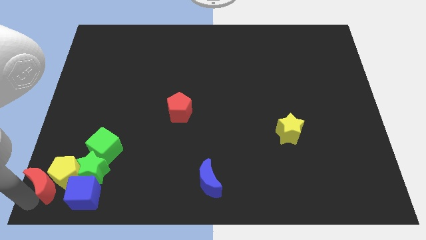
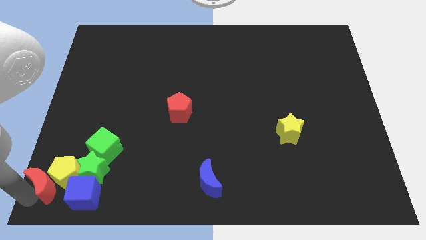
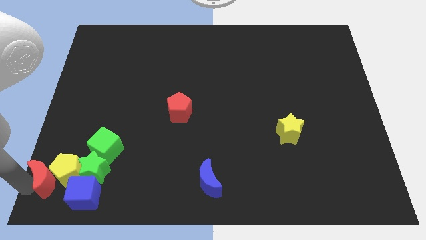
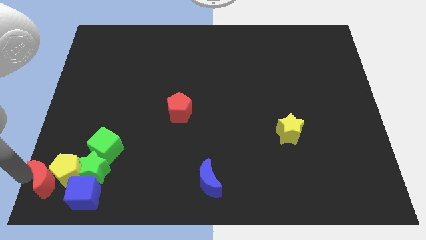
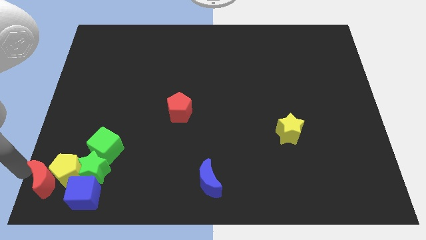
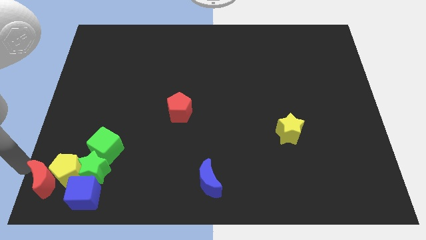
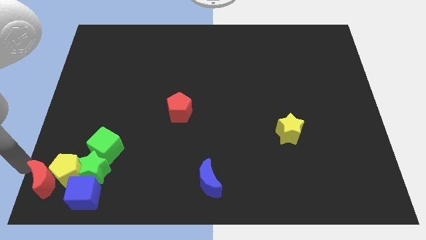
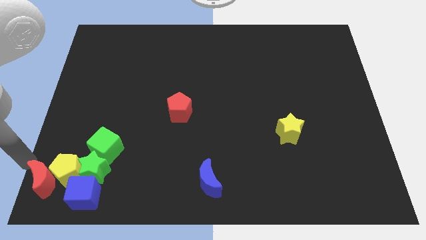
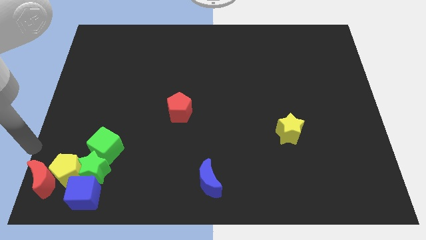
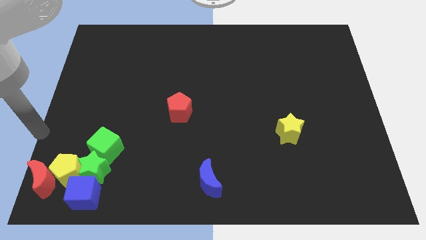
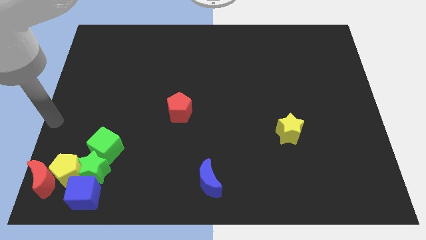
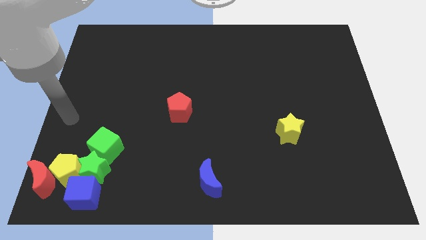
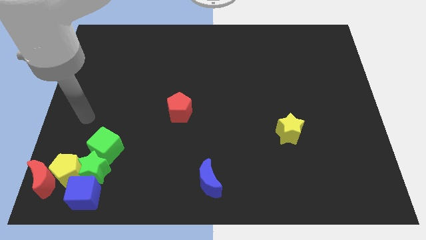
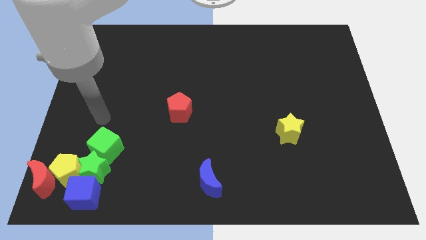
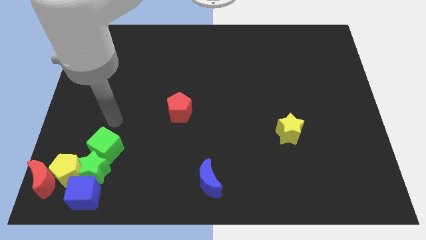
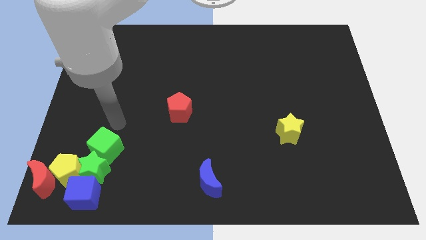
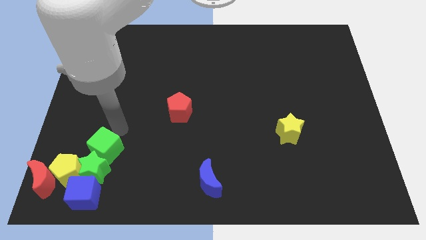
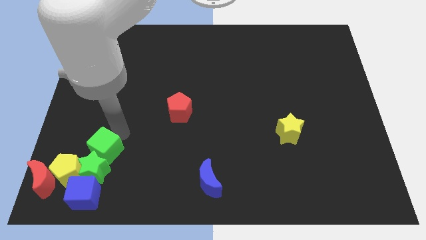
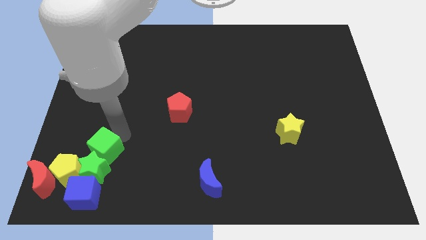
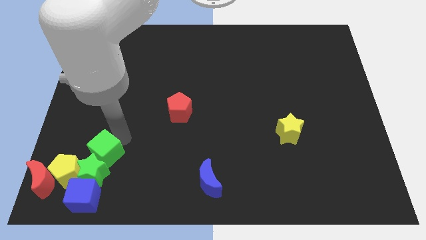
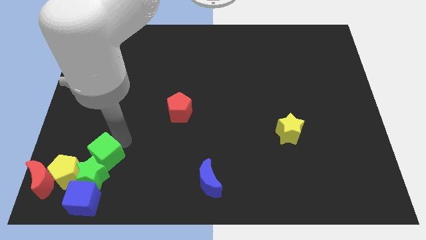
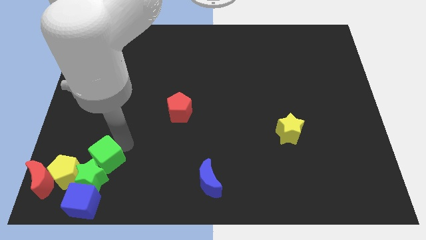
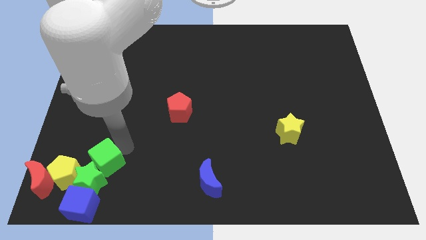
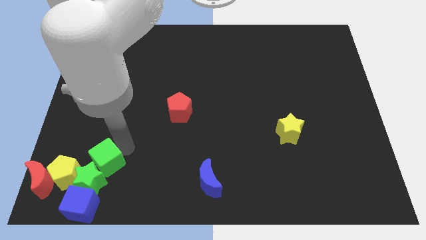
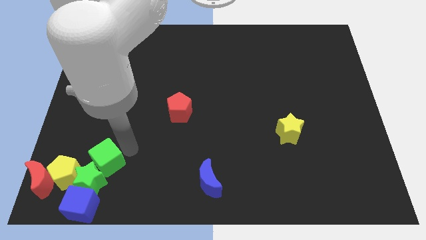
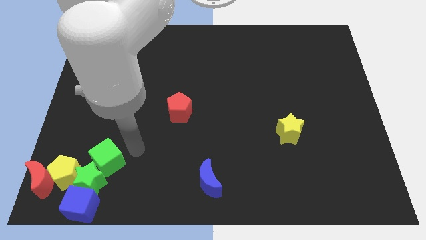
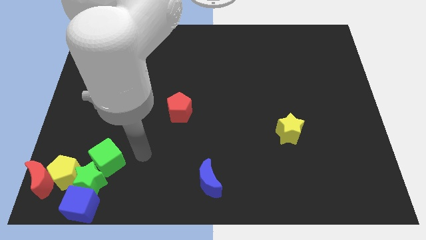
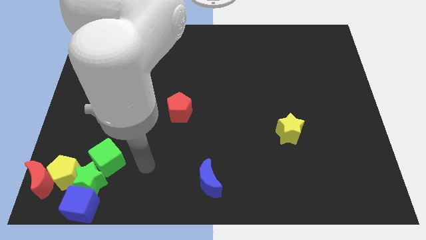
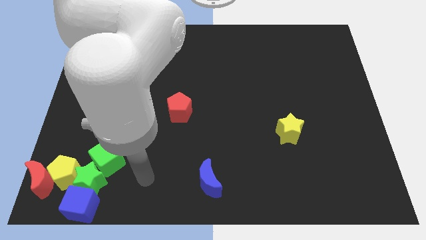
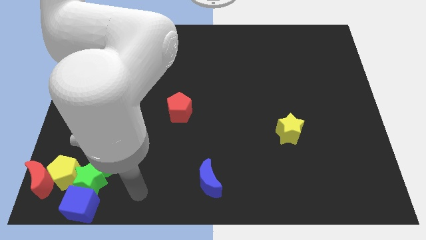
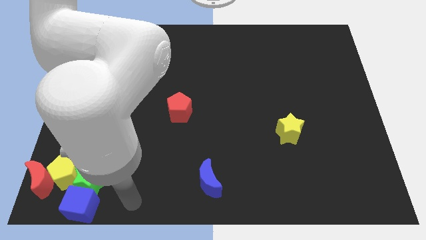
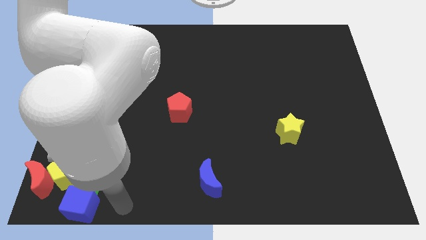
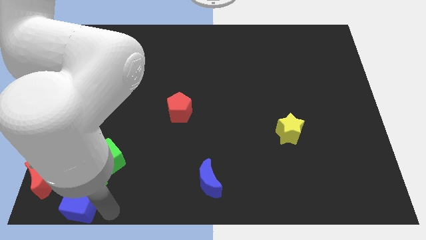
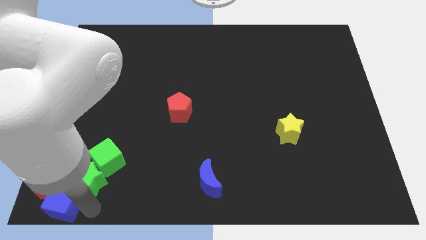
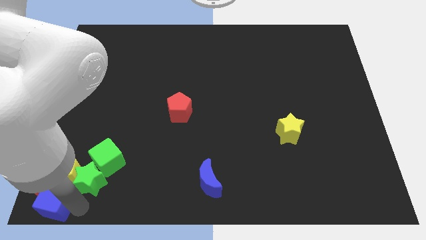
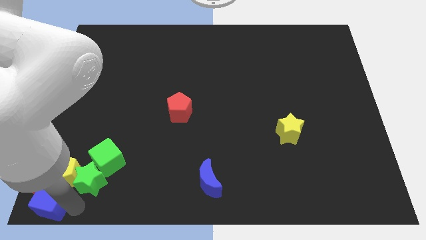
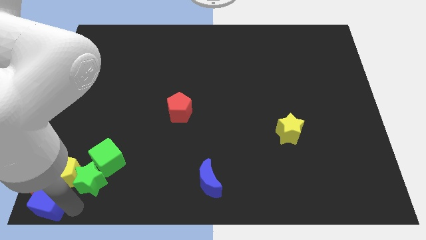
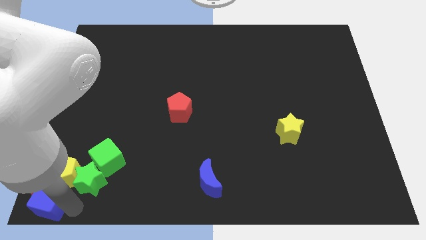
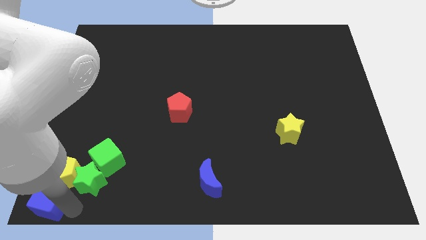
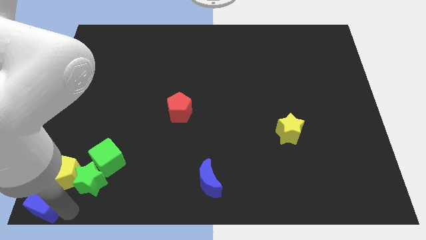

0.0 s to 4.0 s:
adjust the group of blocks at the bottom left corner of the board

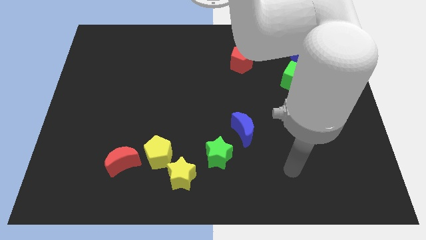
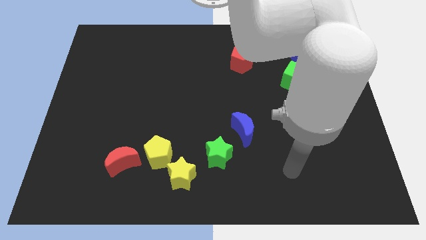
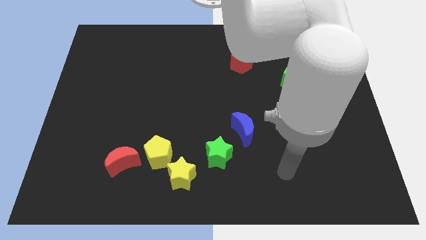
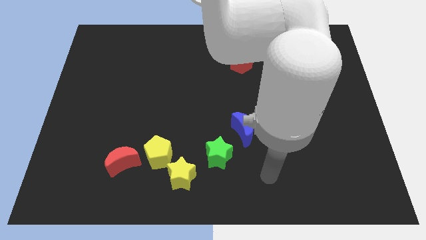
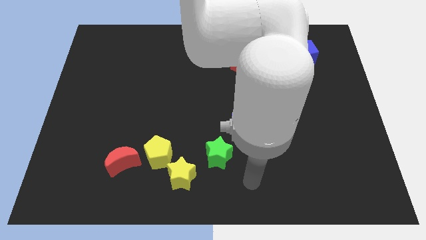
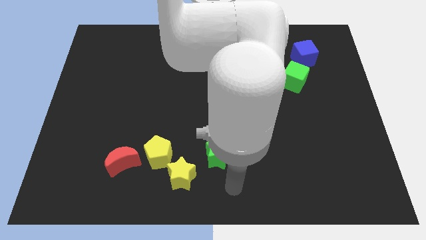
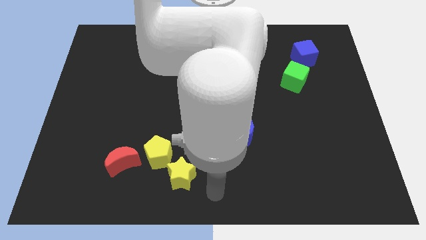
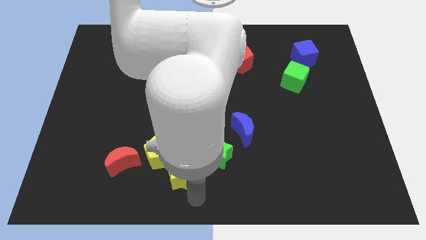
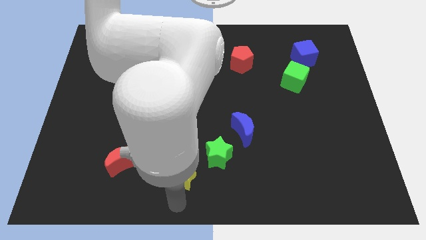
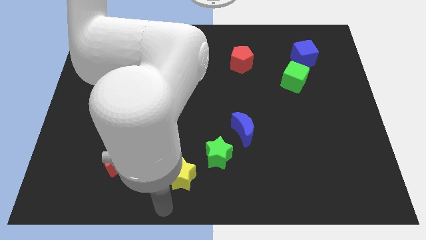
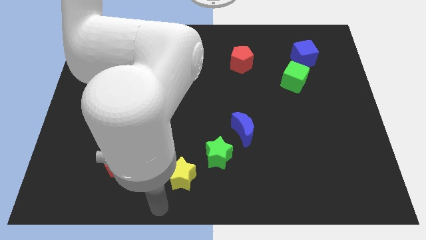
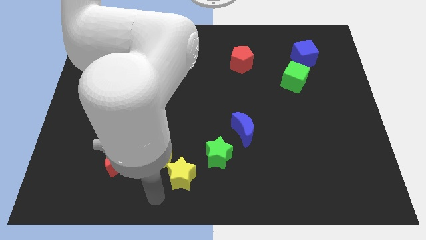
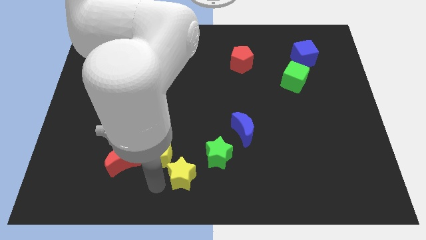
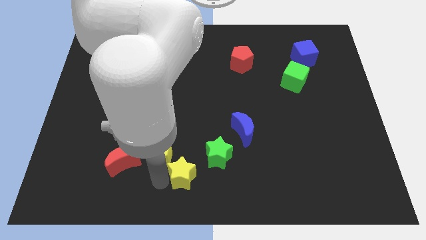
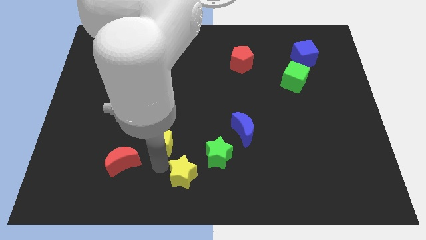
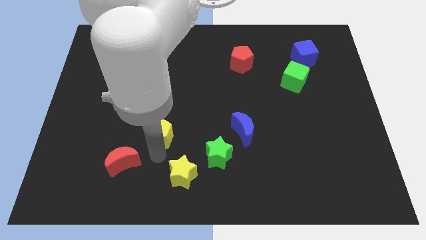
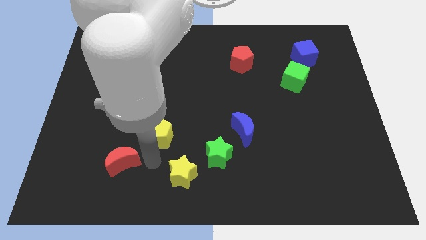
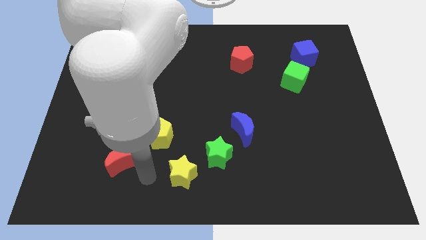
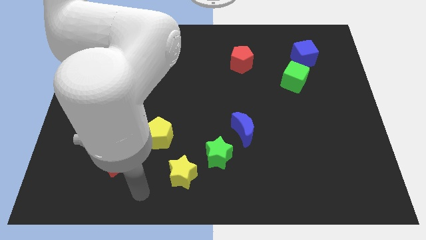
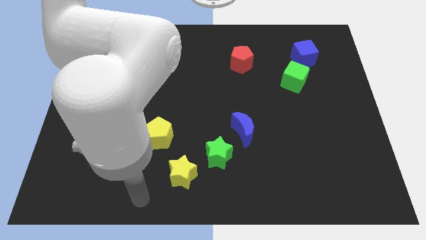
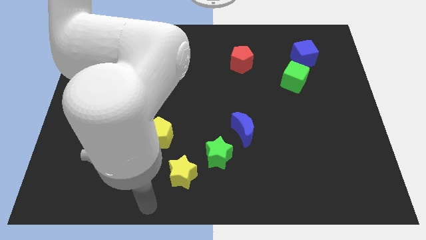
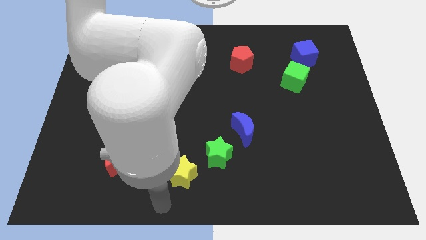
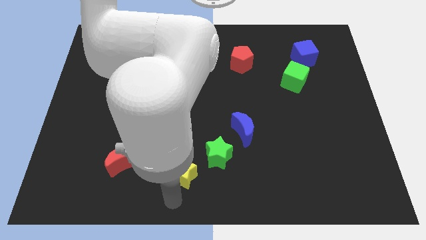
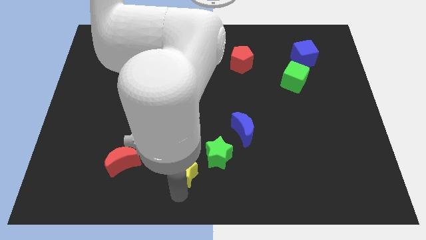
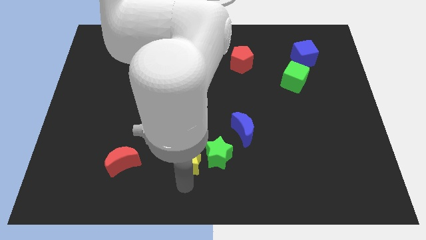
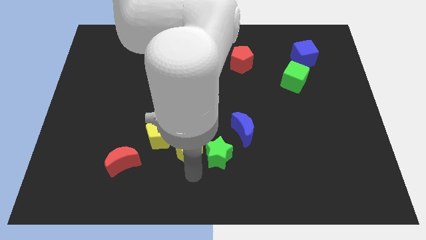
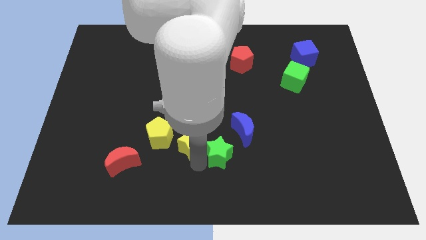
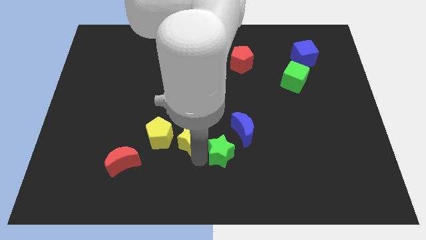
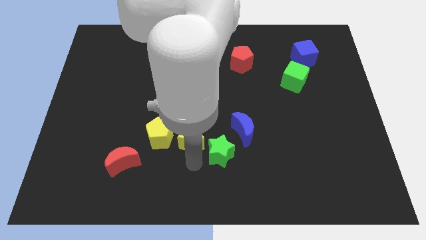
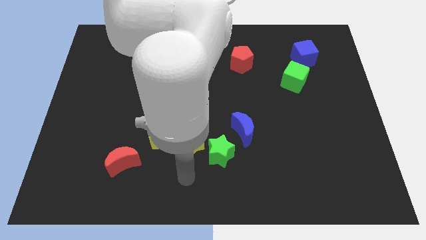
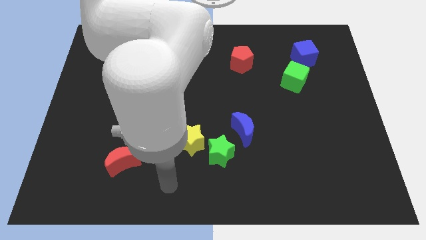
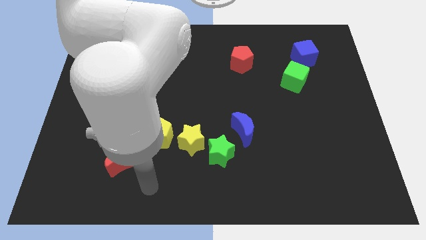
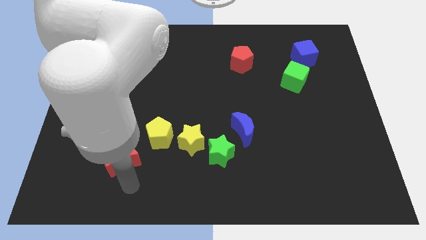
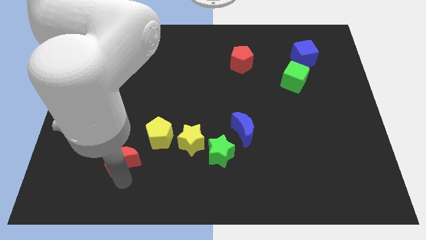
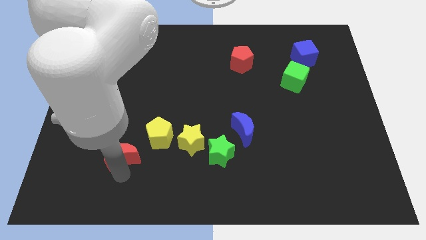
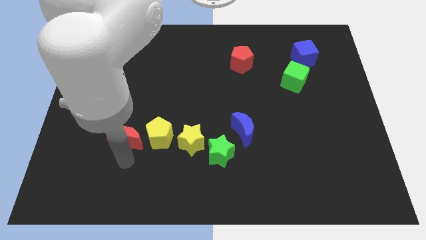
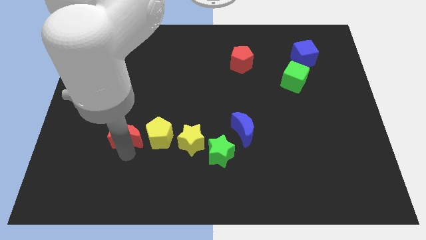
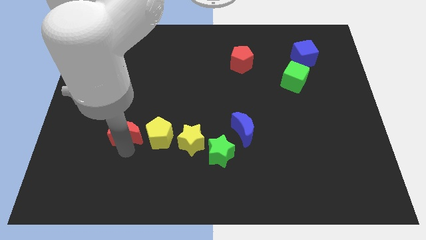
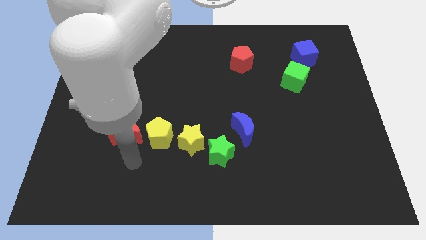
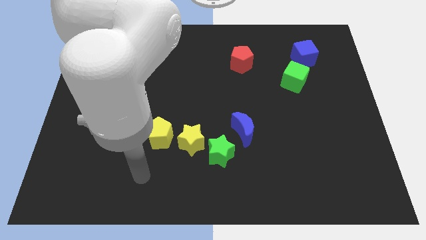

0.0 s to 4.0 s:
make both the yellow blocks and red crescent horizontal to form a line of blocks

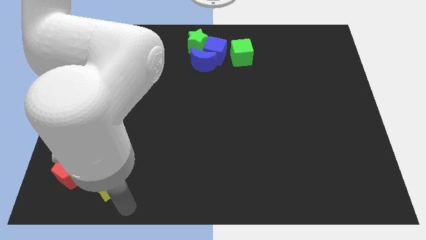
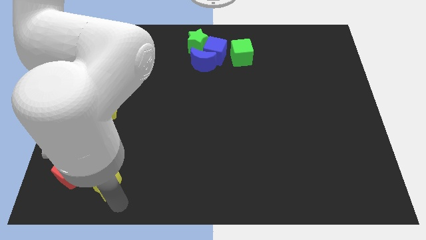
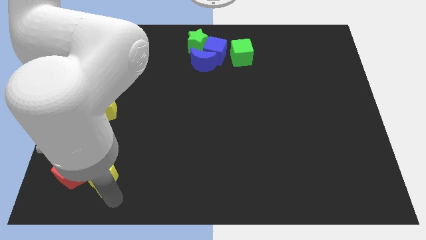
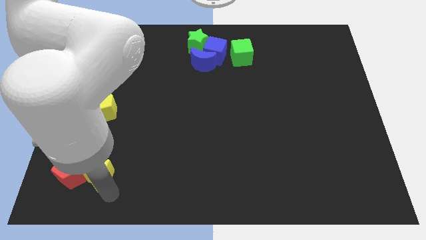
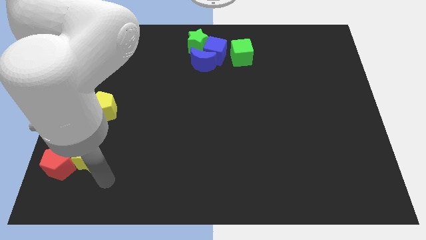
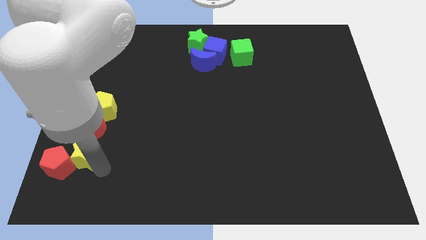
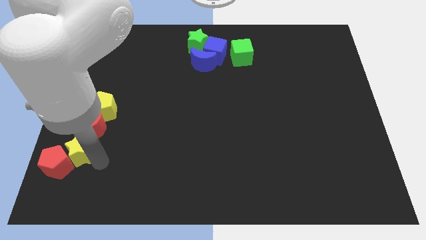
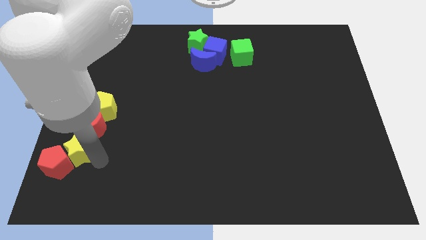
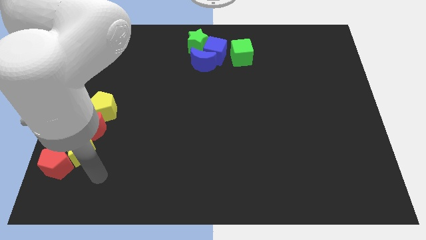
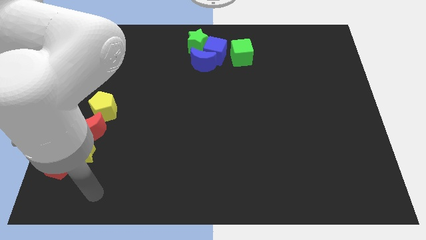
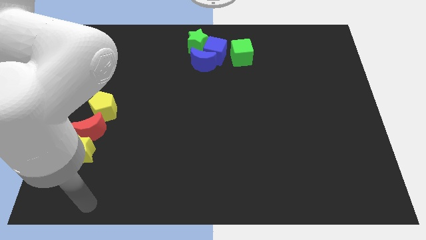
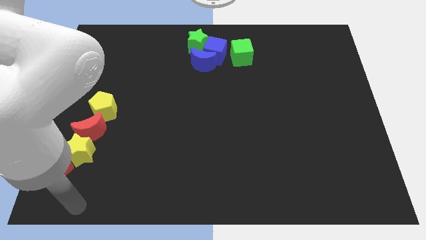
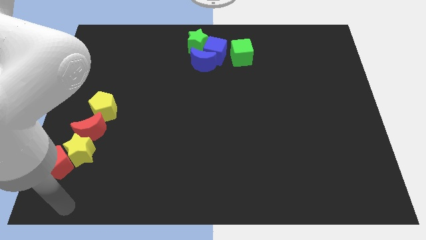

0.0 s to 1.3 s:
move the yellow star in between red moon and red pentagon
